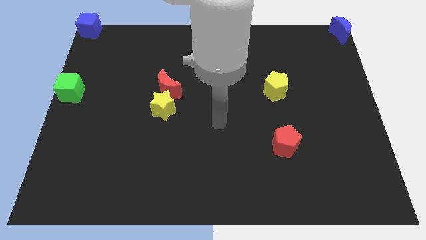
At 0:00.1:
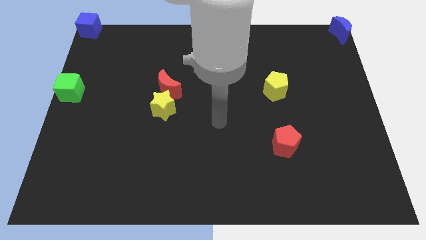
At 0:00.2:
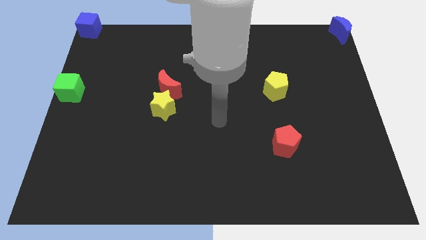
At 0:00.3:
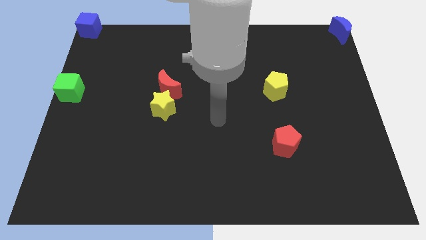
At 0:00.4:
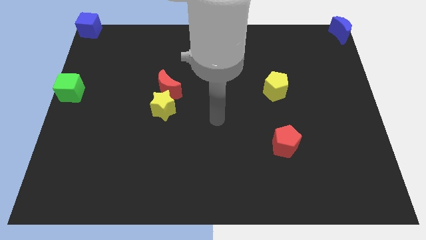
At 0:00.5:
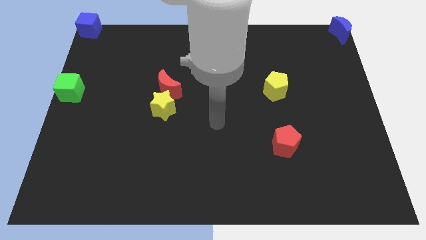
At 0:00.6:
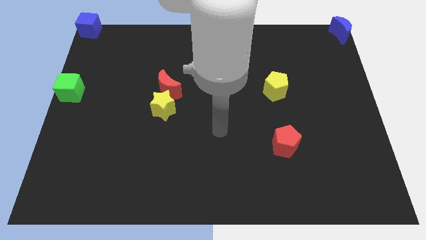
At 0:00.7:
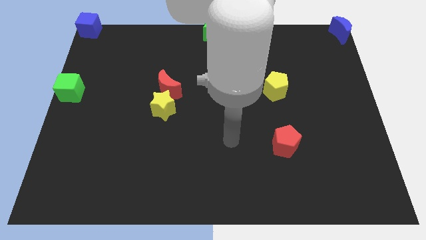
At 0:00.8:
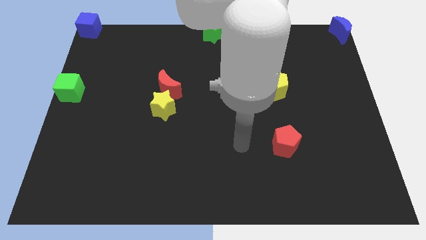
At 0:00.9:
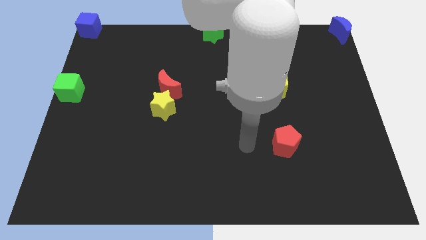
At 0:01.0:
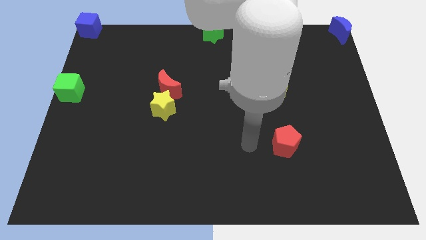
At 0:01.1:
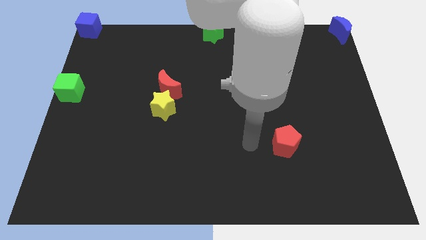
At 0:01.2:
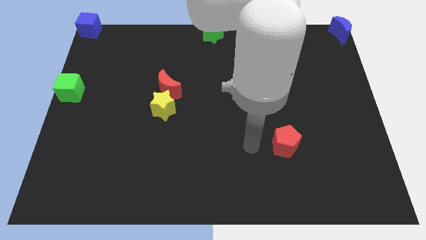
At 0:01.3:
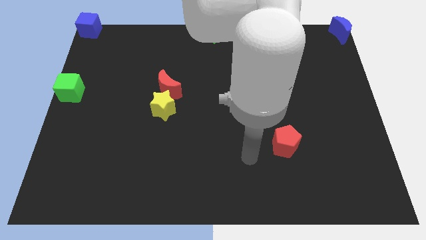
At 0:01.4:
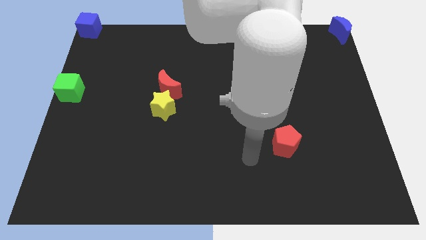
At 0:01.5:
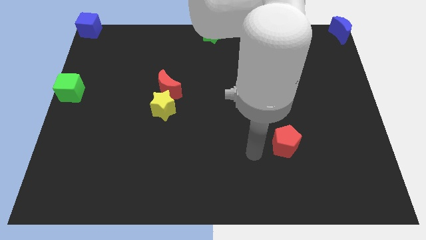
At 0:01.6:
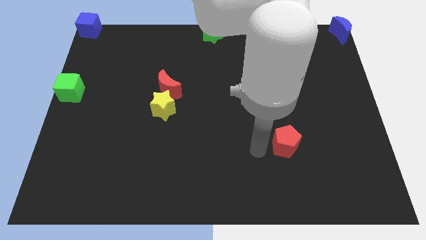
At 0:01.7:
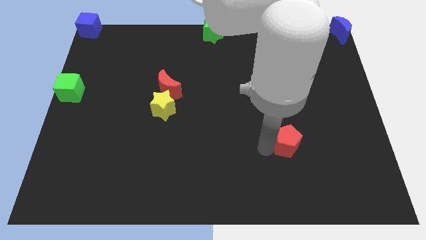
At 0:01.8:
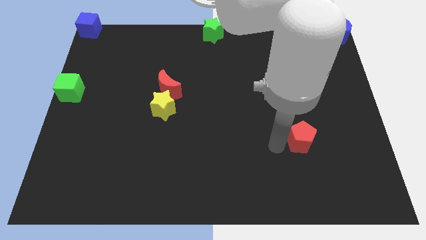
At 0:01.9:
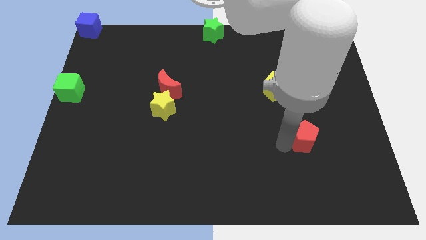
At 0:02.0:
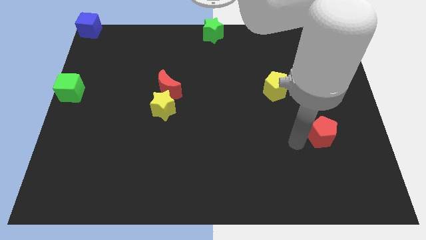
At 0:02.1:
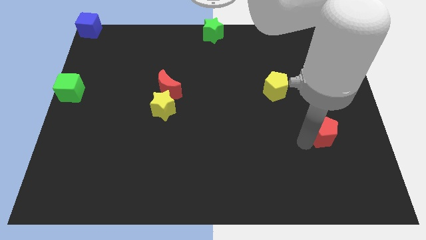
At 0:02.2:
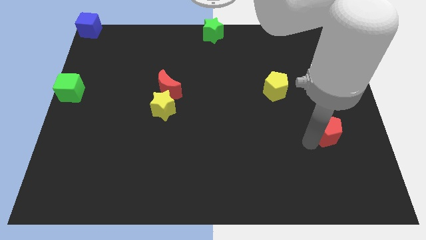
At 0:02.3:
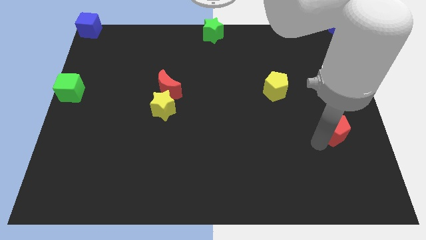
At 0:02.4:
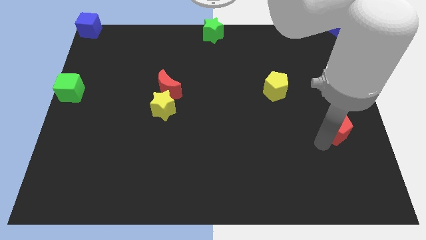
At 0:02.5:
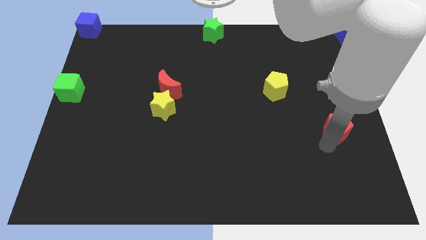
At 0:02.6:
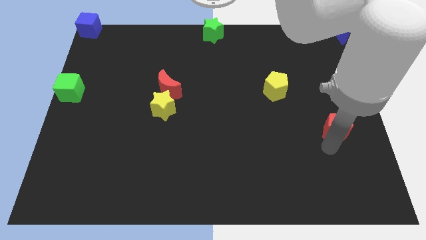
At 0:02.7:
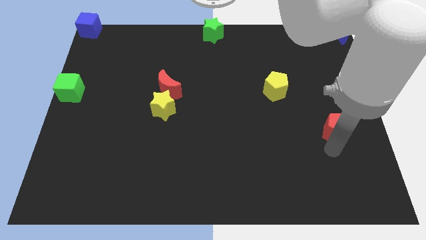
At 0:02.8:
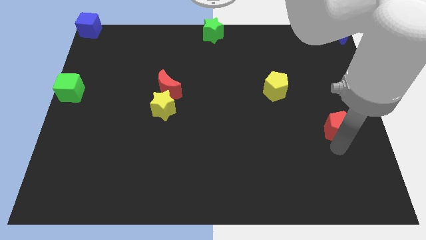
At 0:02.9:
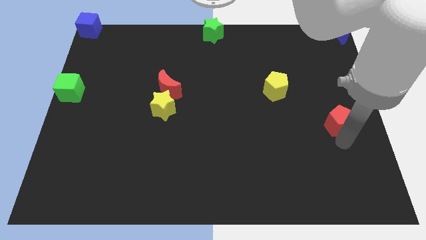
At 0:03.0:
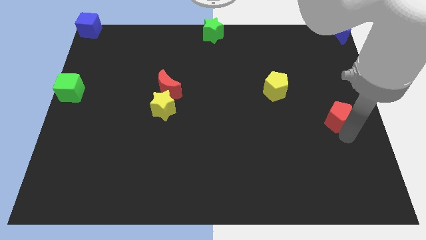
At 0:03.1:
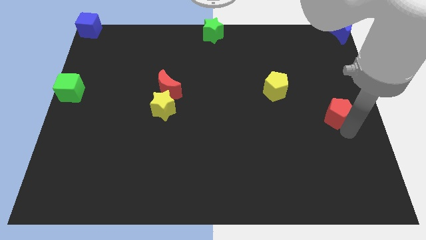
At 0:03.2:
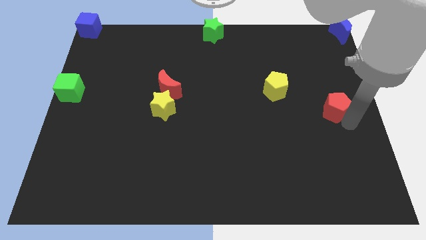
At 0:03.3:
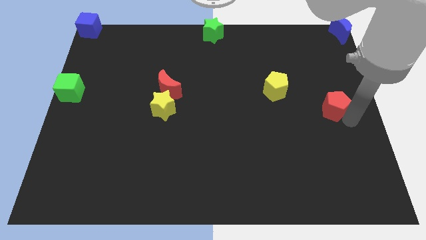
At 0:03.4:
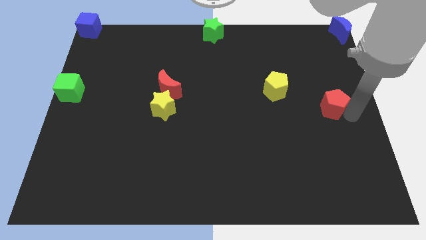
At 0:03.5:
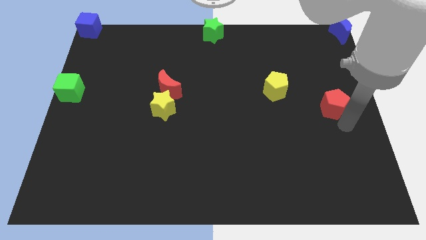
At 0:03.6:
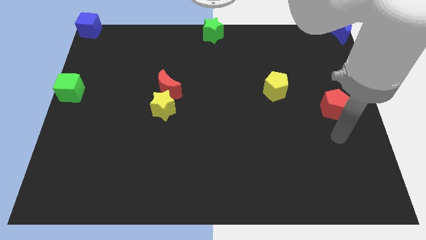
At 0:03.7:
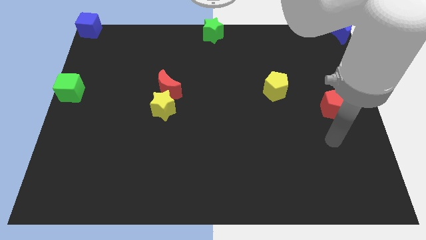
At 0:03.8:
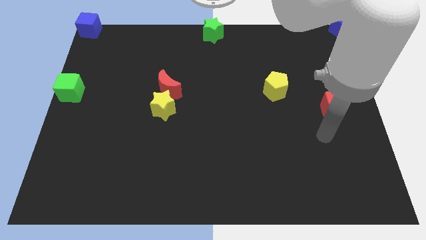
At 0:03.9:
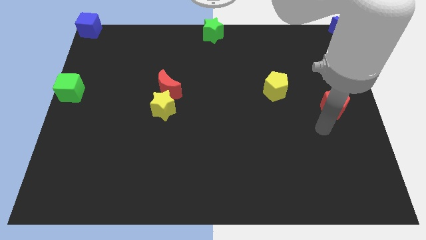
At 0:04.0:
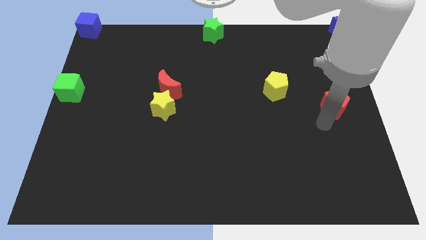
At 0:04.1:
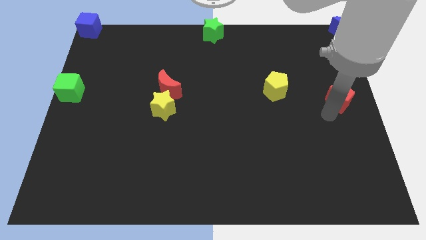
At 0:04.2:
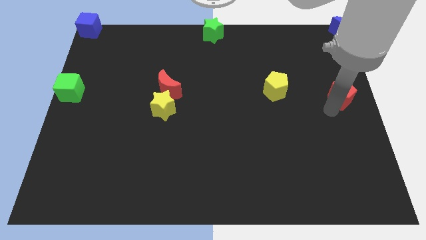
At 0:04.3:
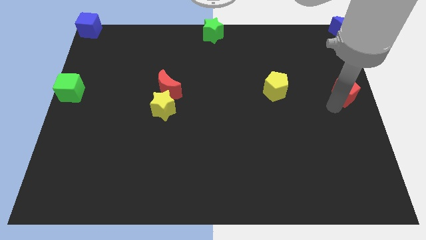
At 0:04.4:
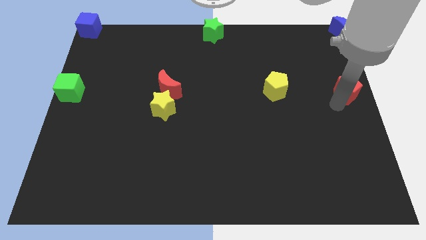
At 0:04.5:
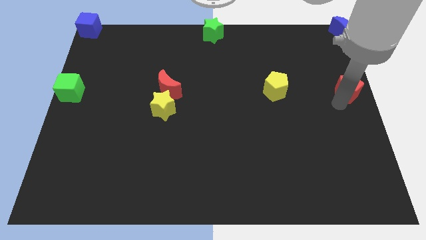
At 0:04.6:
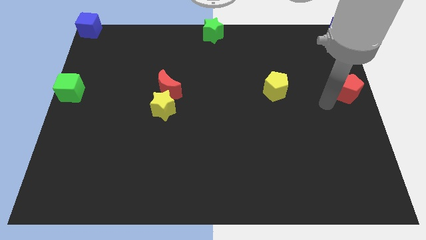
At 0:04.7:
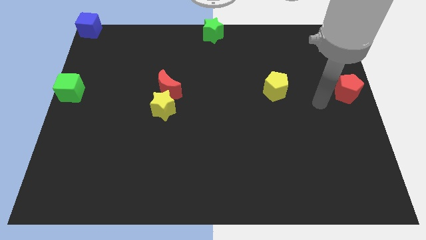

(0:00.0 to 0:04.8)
push the red pentagon to the right of the yellow pentagon

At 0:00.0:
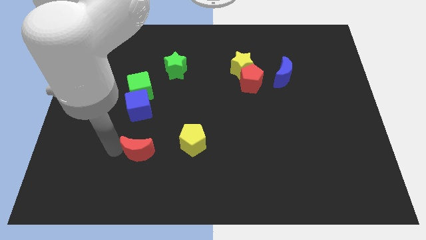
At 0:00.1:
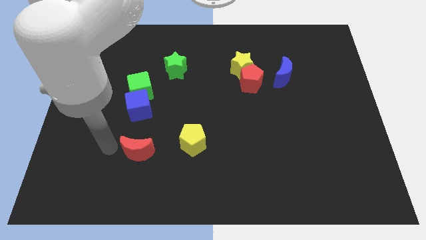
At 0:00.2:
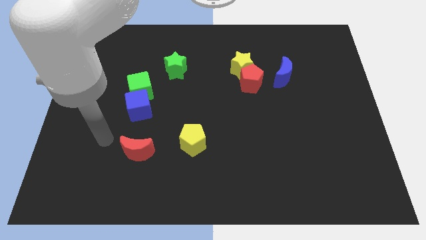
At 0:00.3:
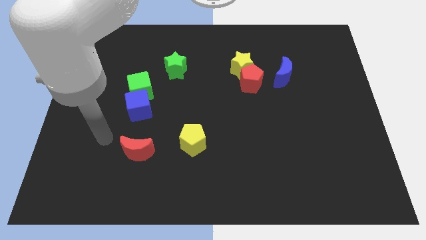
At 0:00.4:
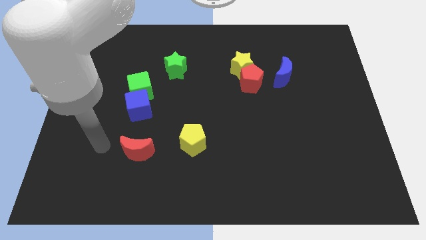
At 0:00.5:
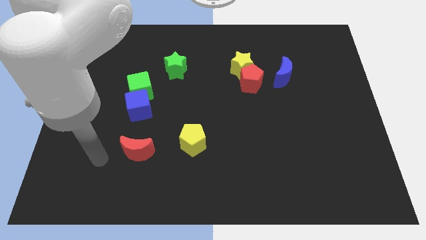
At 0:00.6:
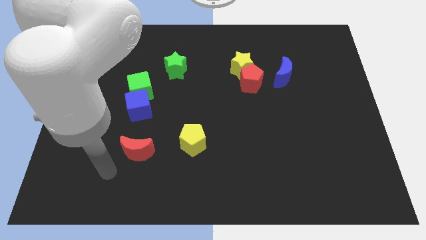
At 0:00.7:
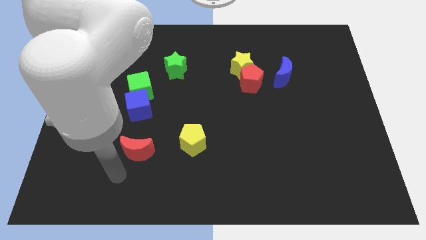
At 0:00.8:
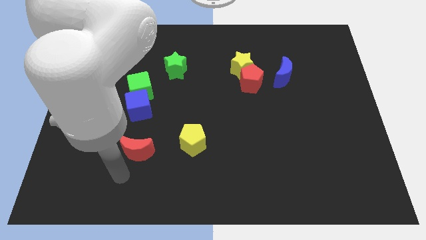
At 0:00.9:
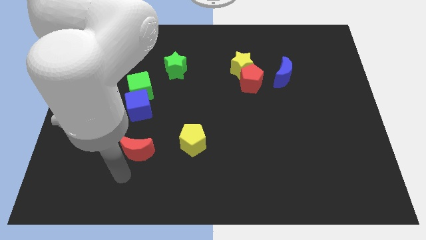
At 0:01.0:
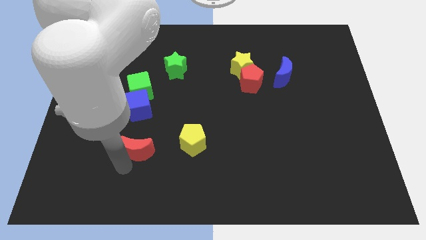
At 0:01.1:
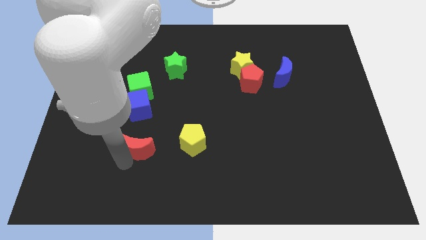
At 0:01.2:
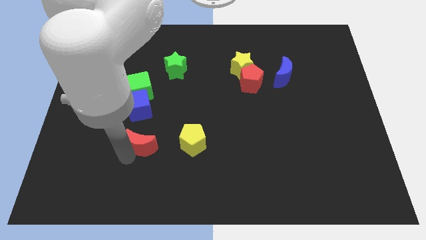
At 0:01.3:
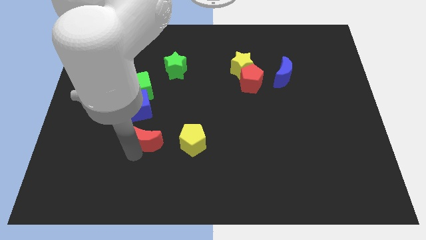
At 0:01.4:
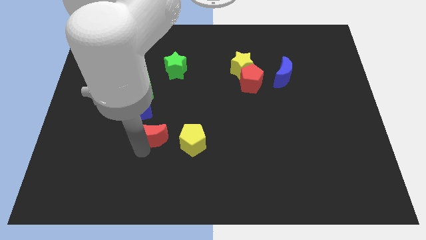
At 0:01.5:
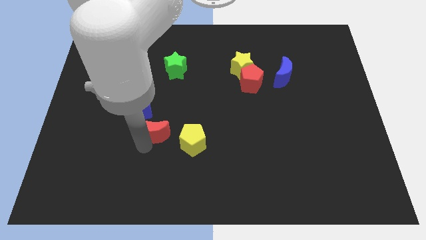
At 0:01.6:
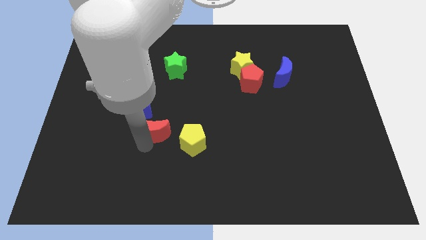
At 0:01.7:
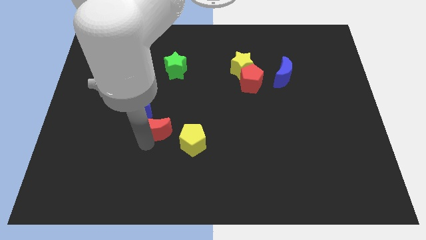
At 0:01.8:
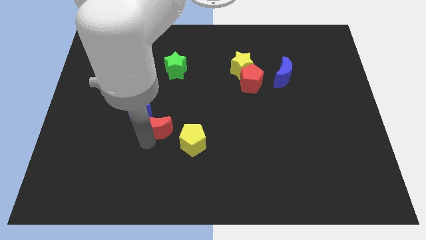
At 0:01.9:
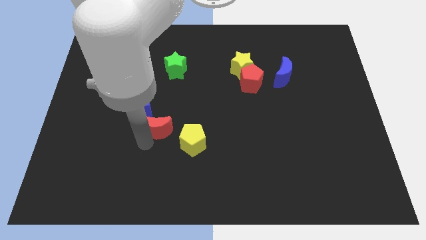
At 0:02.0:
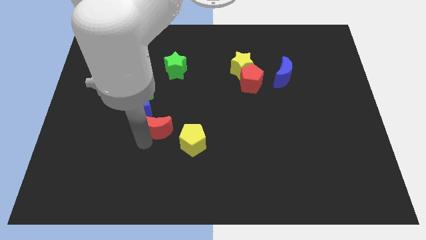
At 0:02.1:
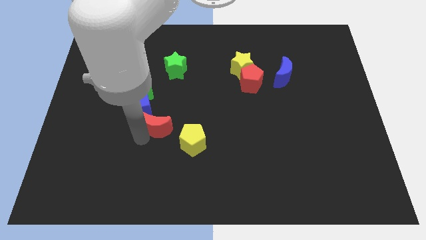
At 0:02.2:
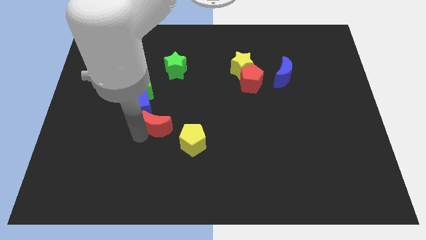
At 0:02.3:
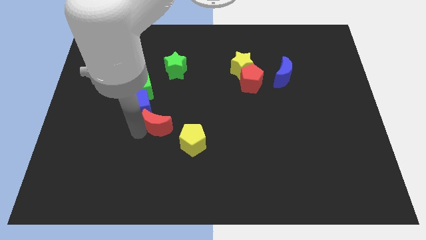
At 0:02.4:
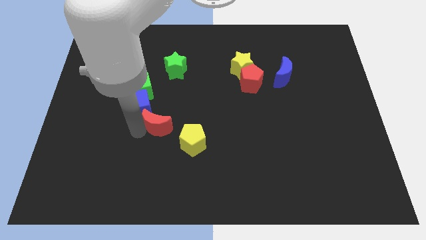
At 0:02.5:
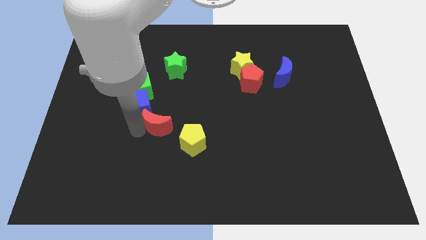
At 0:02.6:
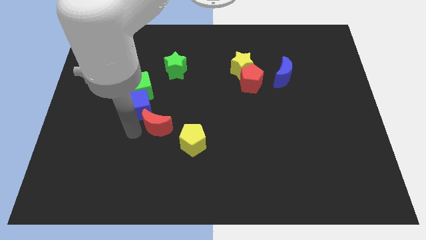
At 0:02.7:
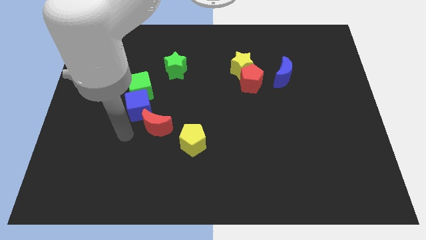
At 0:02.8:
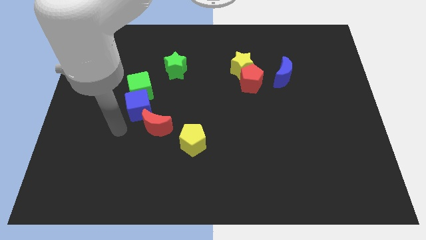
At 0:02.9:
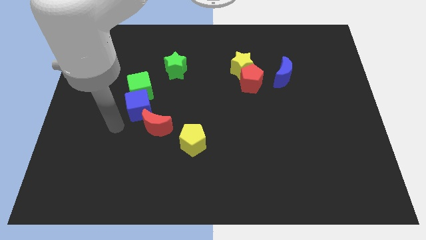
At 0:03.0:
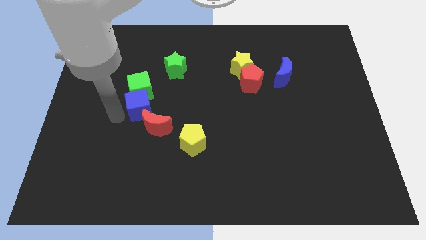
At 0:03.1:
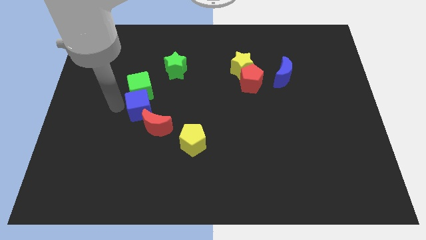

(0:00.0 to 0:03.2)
make the red crescent to touch the blue cube

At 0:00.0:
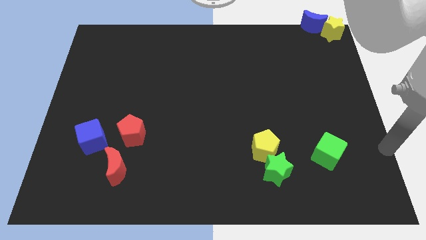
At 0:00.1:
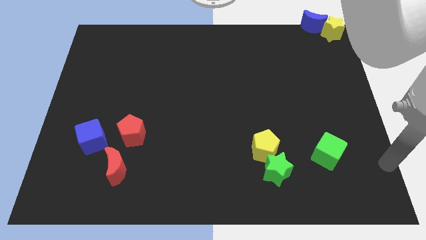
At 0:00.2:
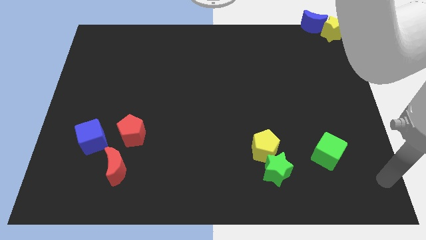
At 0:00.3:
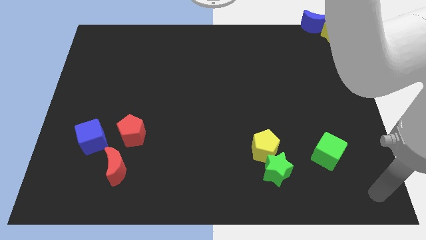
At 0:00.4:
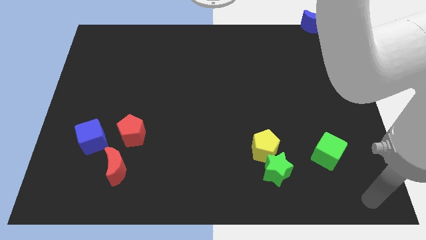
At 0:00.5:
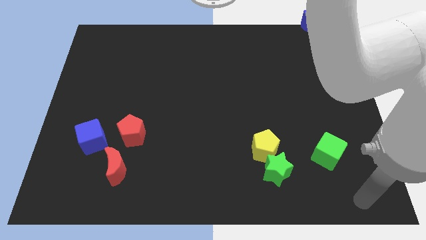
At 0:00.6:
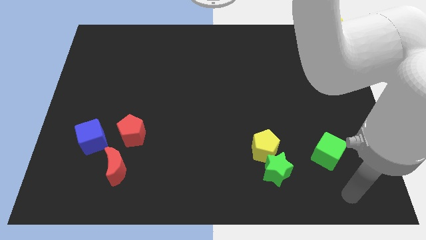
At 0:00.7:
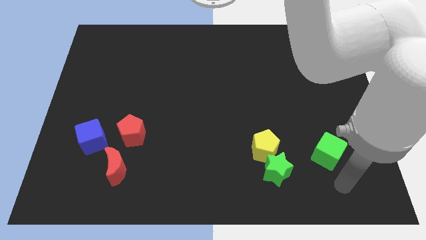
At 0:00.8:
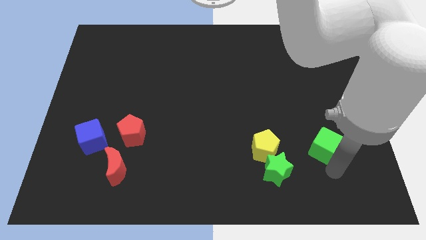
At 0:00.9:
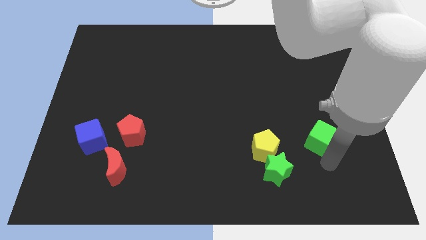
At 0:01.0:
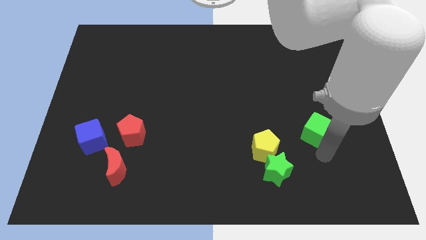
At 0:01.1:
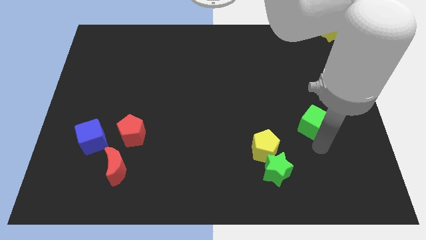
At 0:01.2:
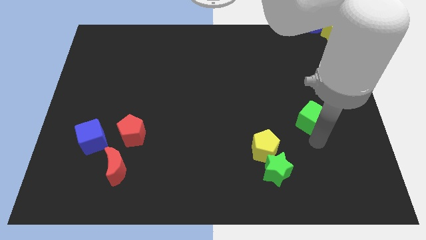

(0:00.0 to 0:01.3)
place the green cube diagonally to green star
